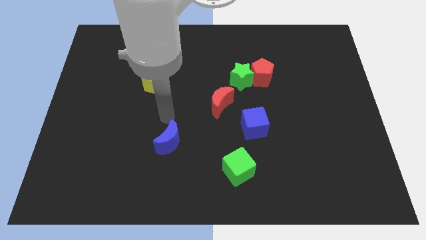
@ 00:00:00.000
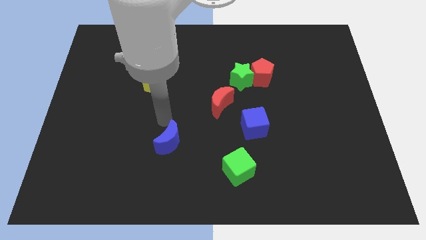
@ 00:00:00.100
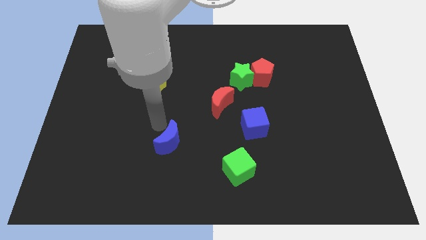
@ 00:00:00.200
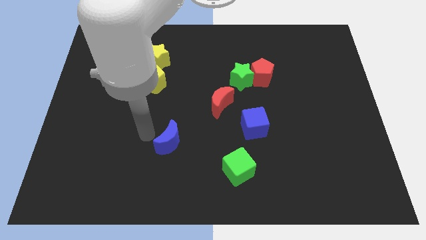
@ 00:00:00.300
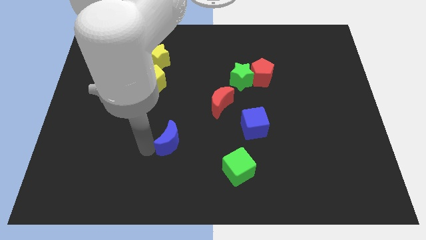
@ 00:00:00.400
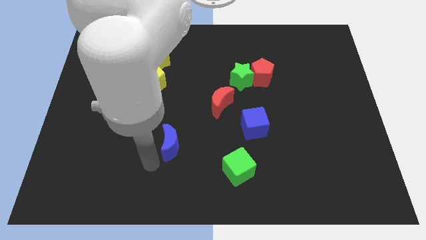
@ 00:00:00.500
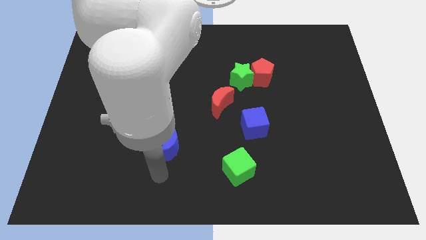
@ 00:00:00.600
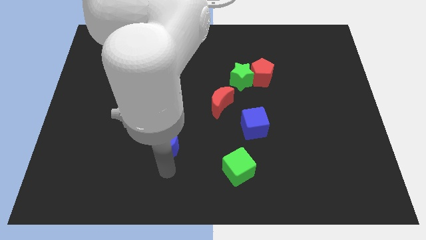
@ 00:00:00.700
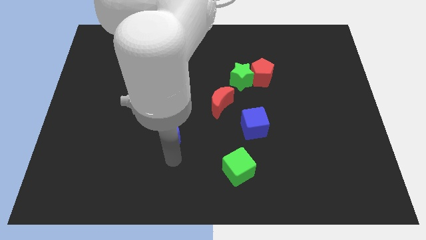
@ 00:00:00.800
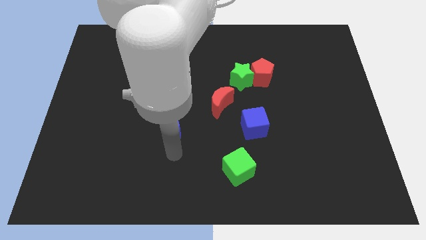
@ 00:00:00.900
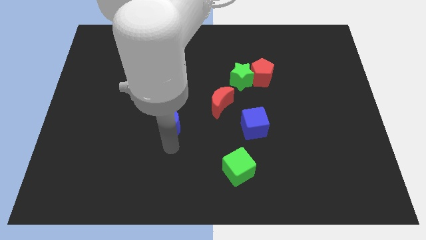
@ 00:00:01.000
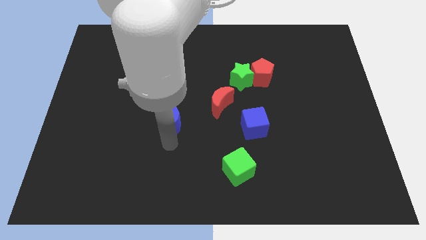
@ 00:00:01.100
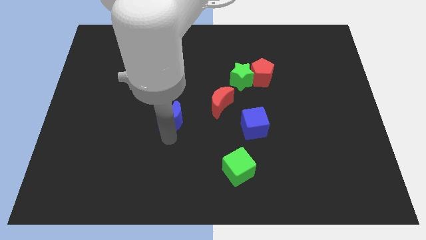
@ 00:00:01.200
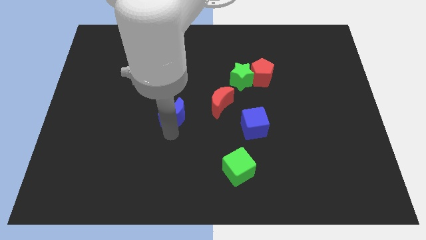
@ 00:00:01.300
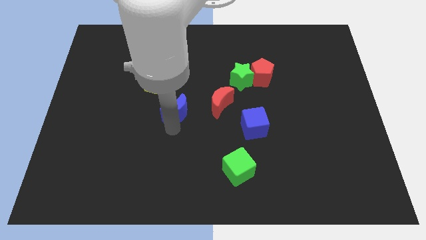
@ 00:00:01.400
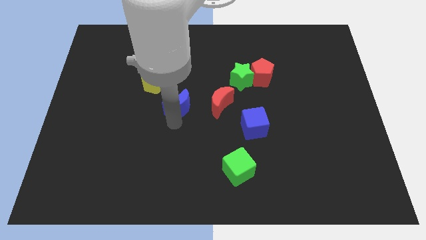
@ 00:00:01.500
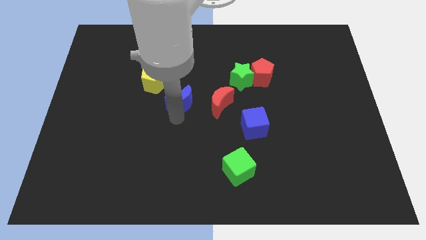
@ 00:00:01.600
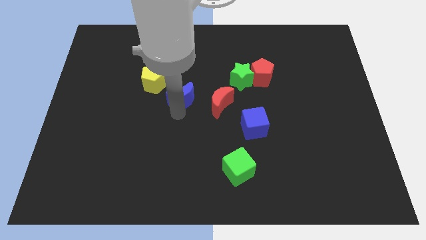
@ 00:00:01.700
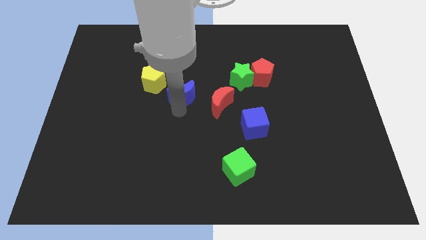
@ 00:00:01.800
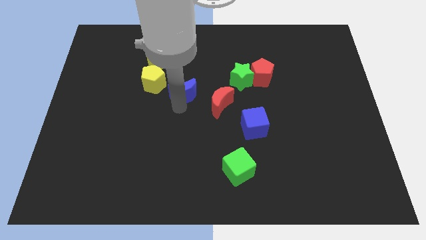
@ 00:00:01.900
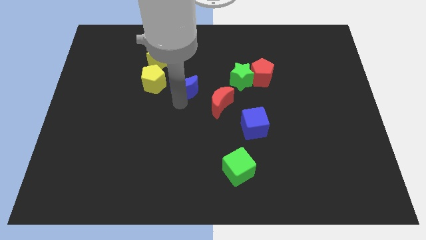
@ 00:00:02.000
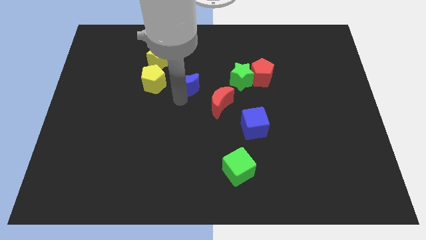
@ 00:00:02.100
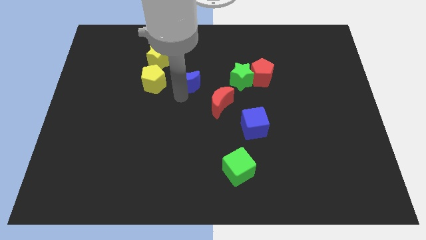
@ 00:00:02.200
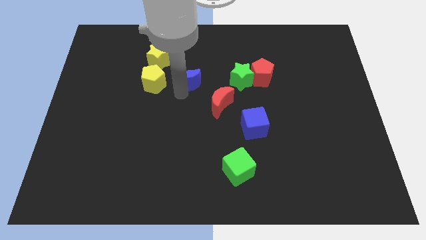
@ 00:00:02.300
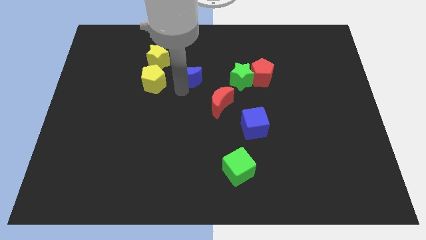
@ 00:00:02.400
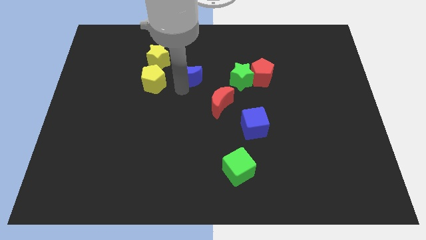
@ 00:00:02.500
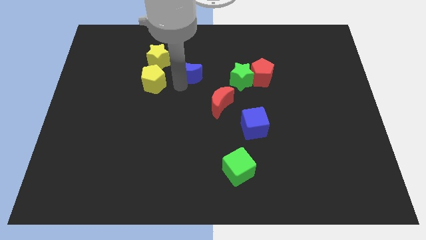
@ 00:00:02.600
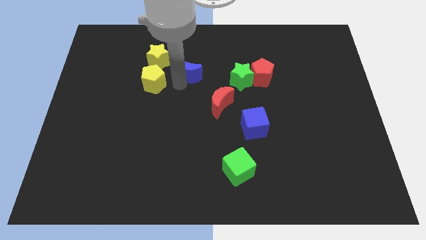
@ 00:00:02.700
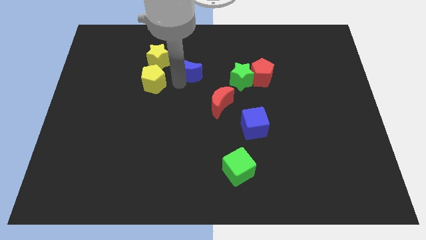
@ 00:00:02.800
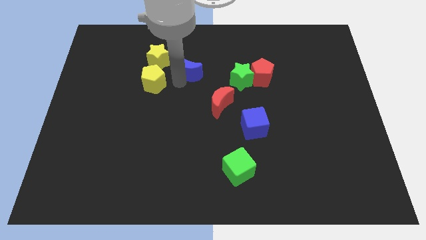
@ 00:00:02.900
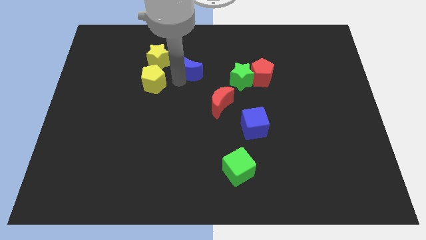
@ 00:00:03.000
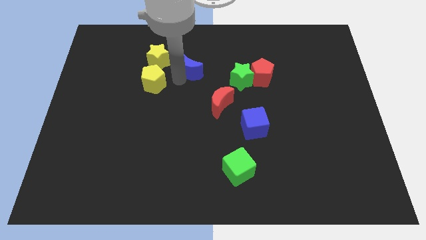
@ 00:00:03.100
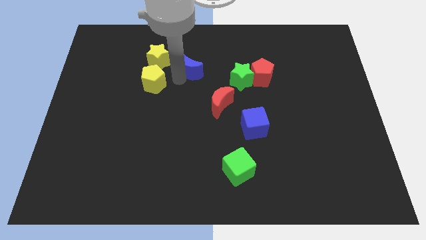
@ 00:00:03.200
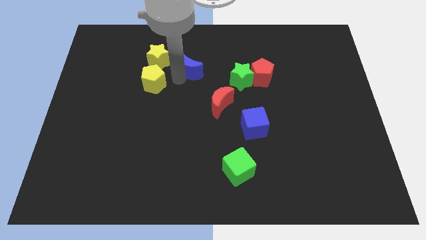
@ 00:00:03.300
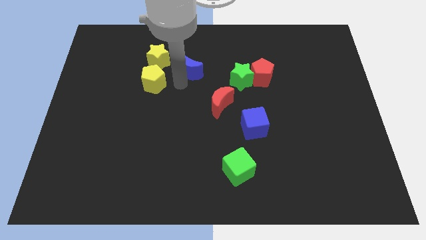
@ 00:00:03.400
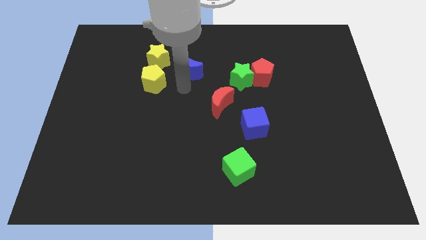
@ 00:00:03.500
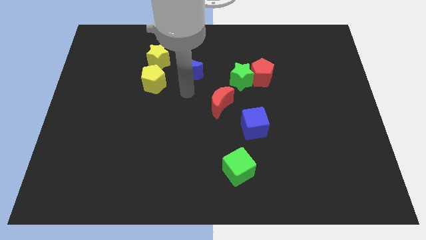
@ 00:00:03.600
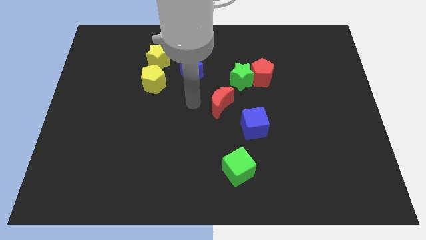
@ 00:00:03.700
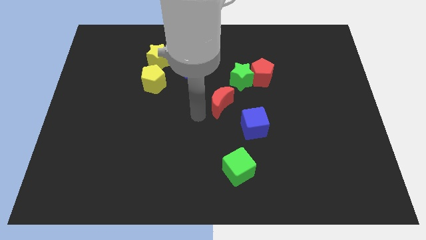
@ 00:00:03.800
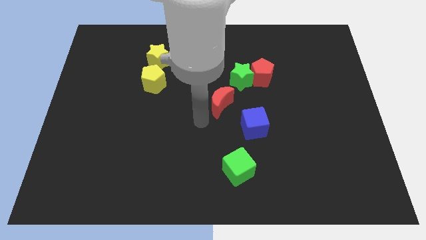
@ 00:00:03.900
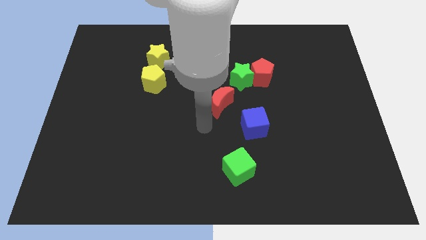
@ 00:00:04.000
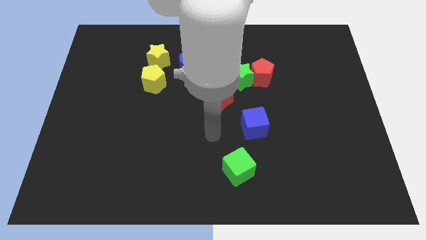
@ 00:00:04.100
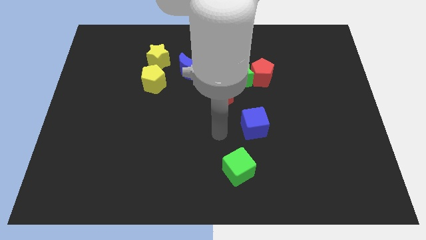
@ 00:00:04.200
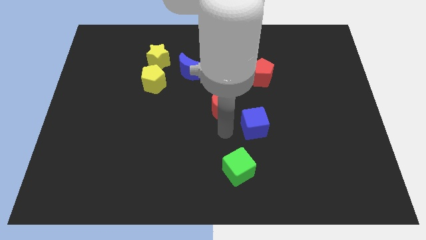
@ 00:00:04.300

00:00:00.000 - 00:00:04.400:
place the blue moon towards the bottom right side of the yellow star

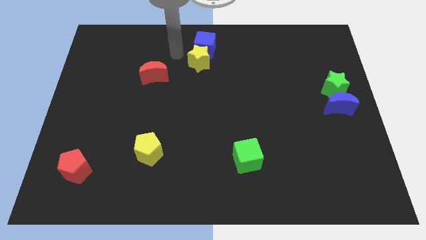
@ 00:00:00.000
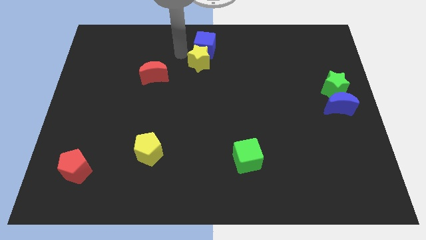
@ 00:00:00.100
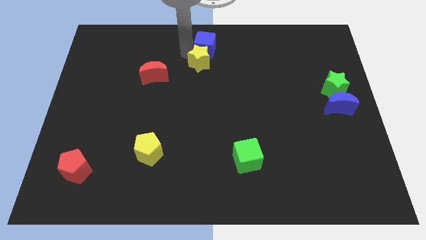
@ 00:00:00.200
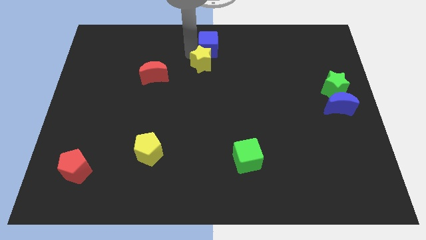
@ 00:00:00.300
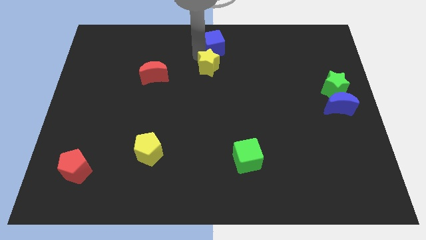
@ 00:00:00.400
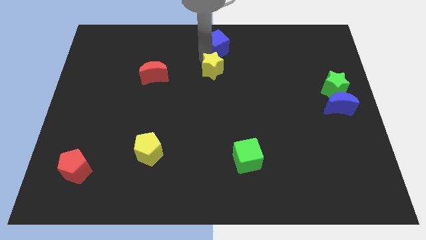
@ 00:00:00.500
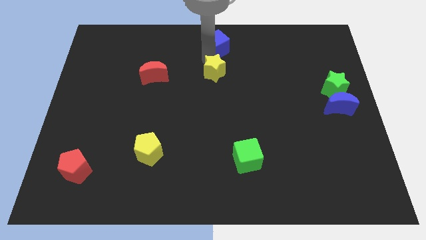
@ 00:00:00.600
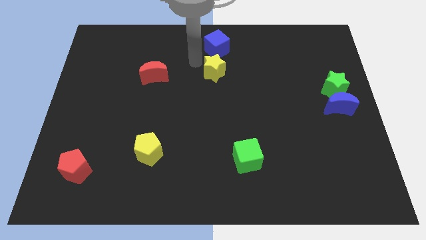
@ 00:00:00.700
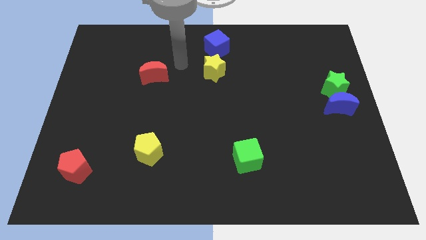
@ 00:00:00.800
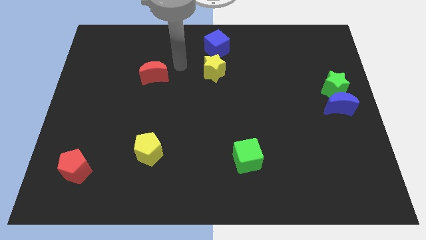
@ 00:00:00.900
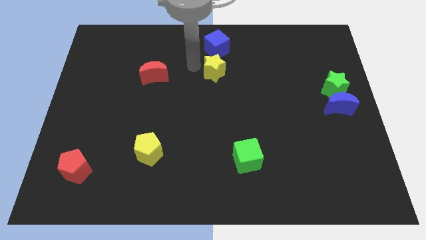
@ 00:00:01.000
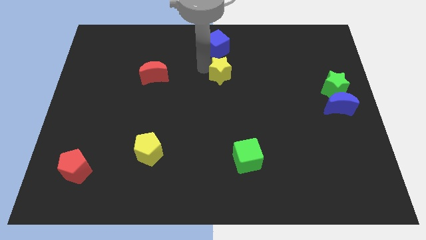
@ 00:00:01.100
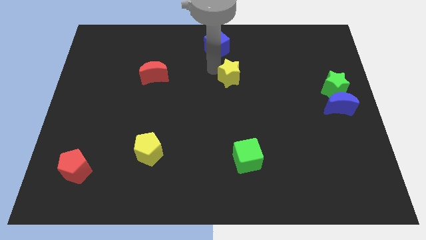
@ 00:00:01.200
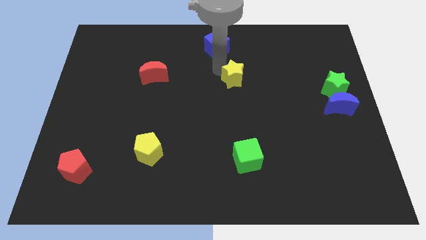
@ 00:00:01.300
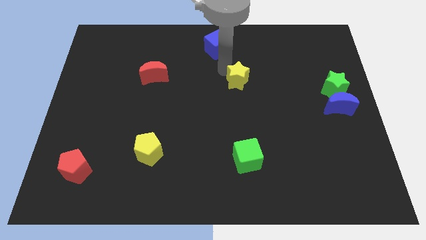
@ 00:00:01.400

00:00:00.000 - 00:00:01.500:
separate the yellow star and the blue cube

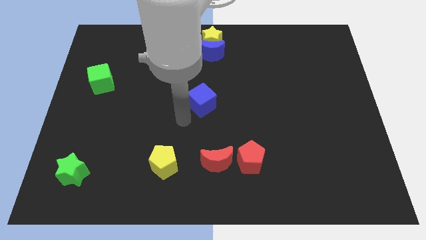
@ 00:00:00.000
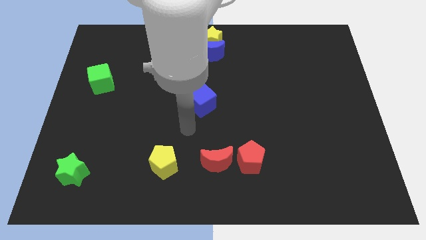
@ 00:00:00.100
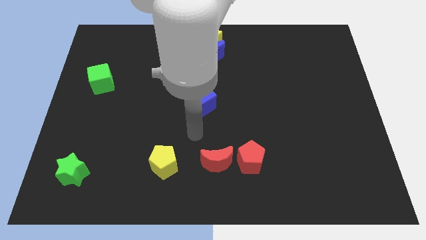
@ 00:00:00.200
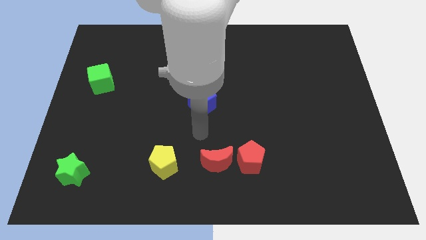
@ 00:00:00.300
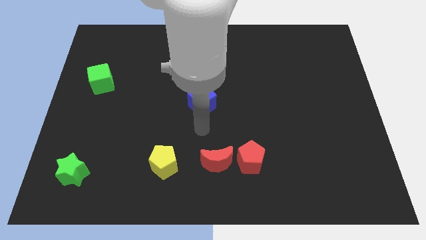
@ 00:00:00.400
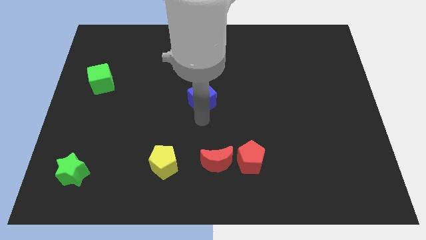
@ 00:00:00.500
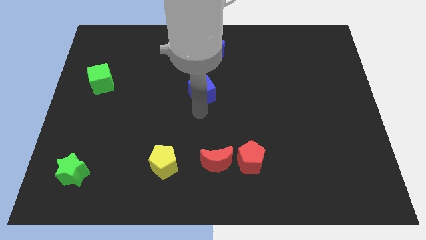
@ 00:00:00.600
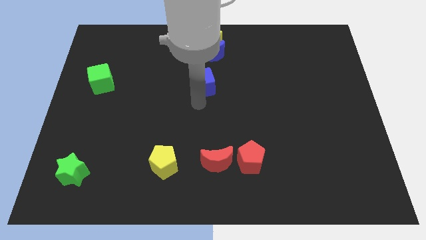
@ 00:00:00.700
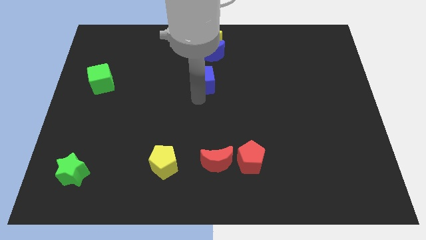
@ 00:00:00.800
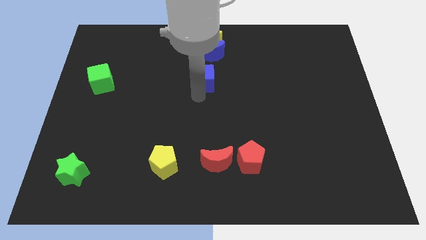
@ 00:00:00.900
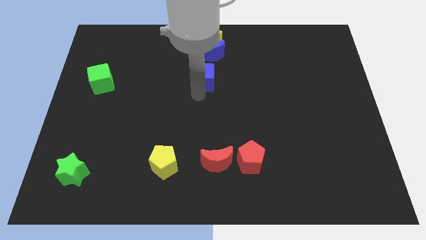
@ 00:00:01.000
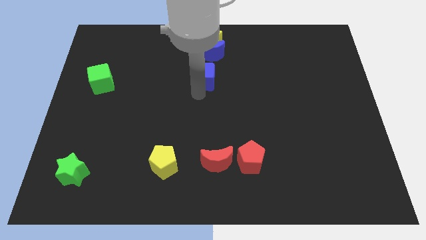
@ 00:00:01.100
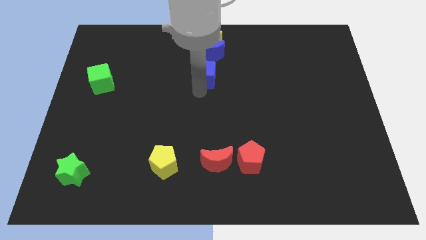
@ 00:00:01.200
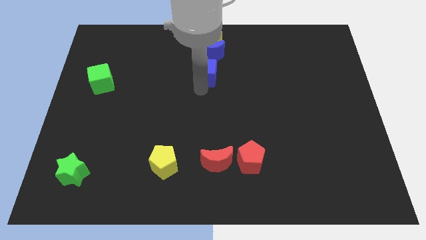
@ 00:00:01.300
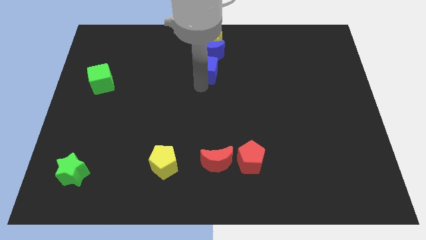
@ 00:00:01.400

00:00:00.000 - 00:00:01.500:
push the blue cube towards the blue crescent

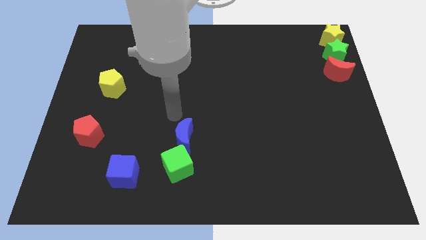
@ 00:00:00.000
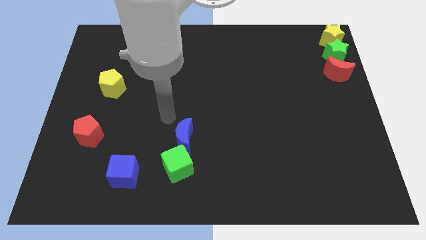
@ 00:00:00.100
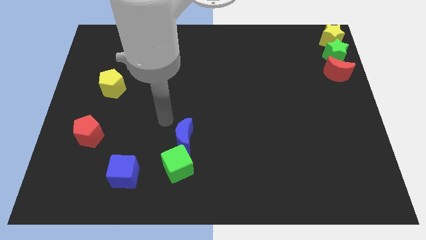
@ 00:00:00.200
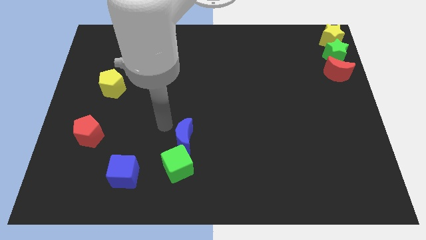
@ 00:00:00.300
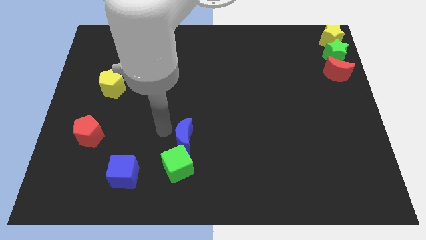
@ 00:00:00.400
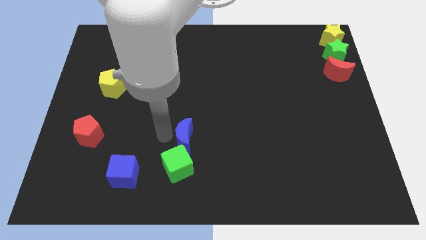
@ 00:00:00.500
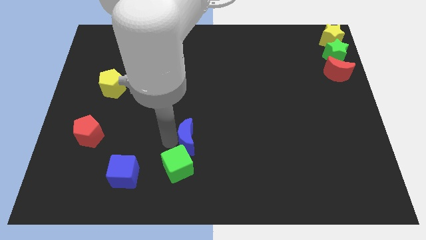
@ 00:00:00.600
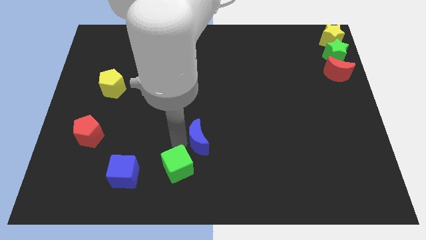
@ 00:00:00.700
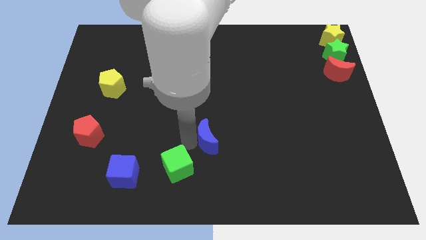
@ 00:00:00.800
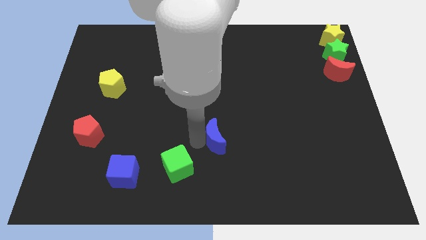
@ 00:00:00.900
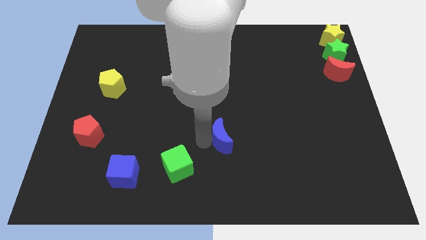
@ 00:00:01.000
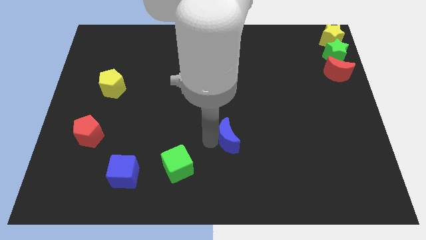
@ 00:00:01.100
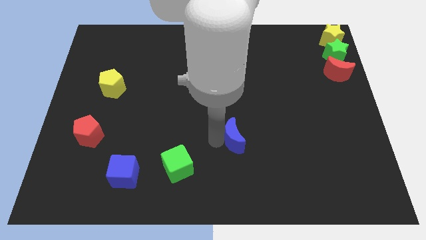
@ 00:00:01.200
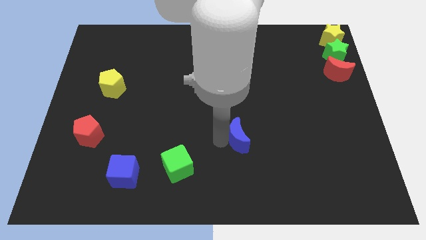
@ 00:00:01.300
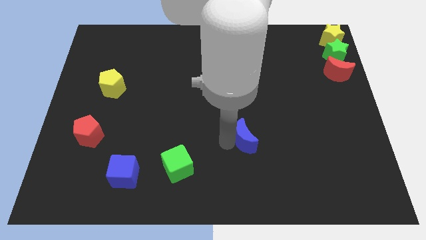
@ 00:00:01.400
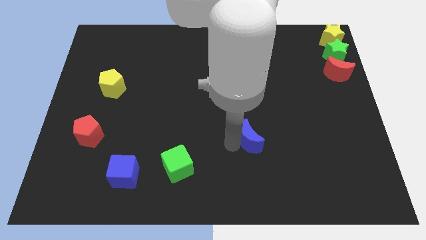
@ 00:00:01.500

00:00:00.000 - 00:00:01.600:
move blue moo slightly right
